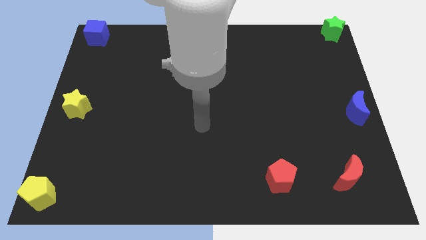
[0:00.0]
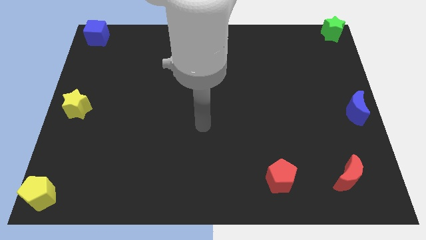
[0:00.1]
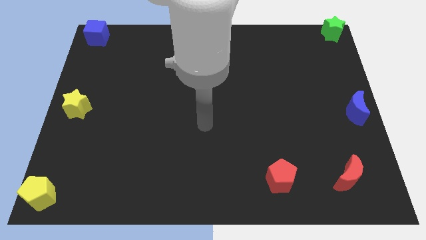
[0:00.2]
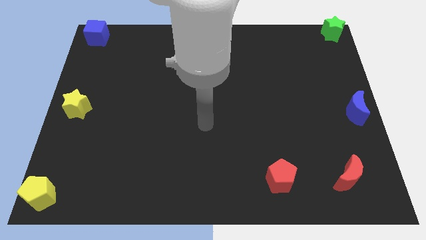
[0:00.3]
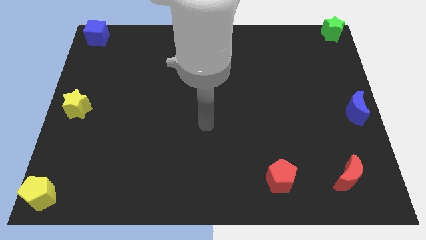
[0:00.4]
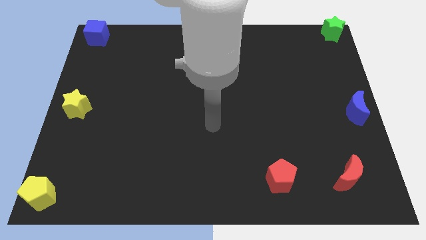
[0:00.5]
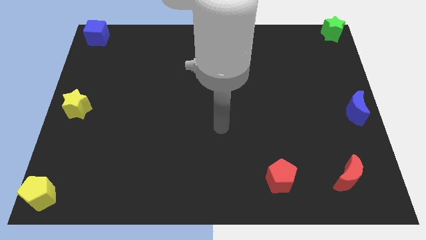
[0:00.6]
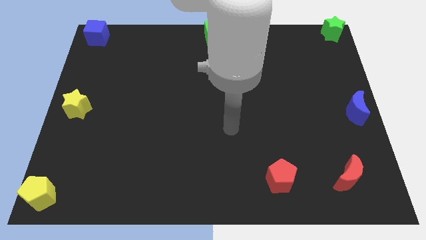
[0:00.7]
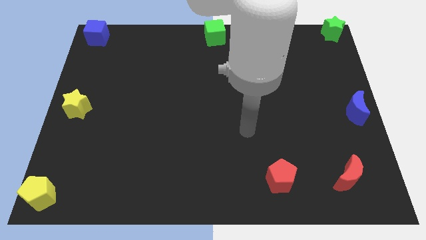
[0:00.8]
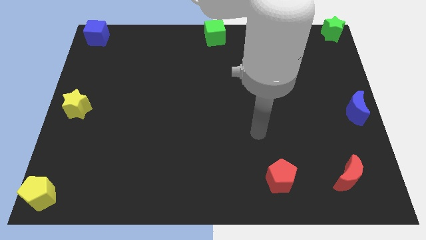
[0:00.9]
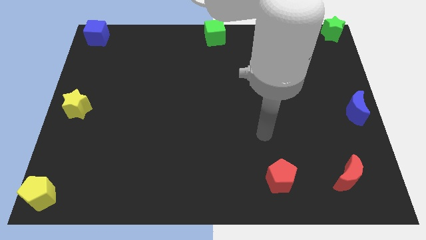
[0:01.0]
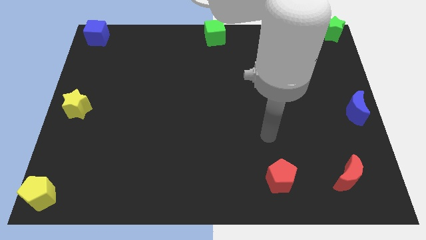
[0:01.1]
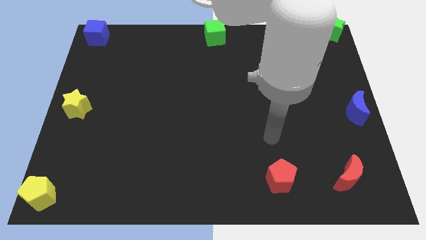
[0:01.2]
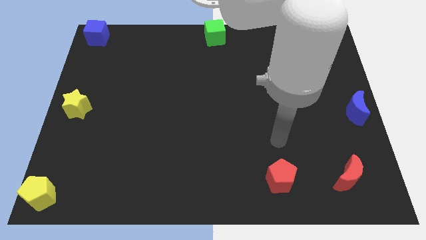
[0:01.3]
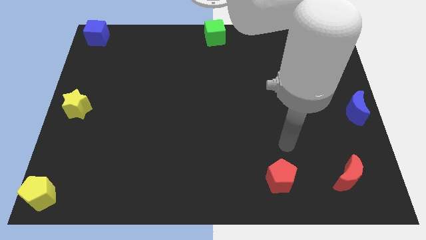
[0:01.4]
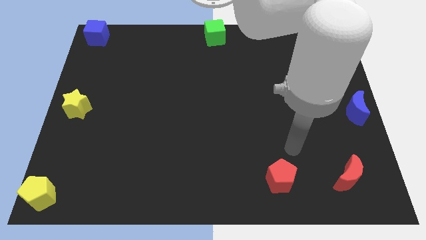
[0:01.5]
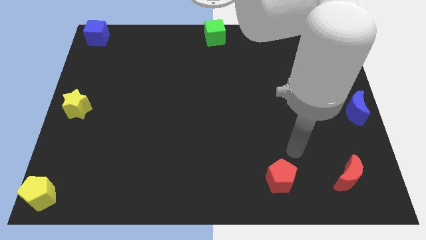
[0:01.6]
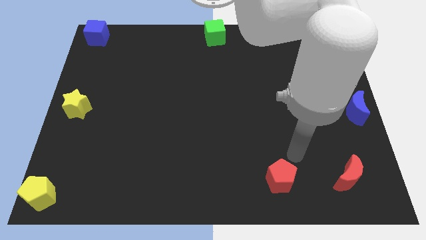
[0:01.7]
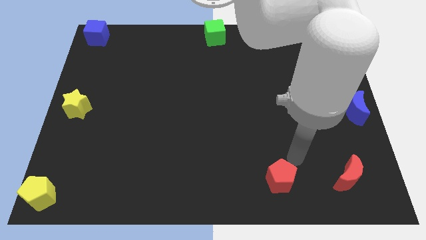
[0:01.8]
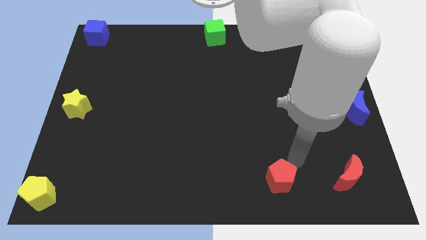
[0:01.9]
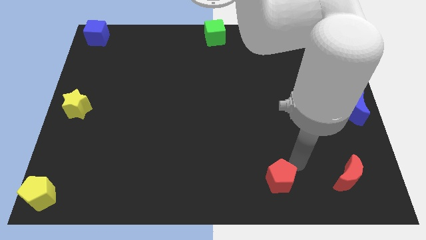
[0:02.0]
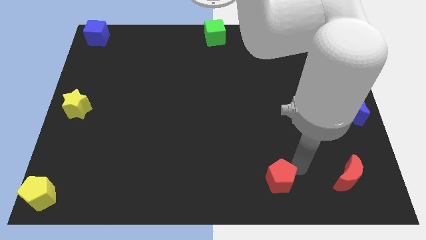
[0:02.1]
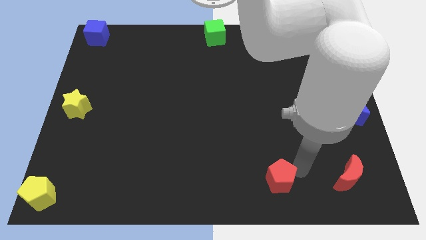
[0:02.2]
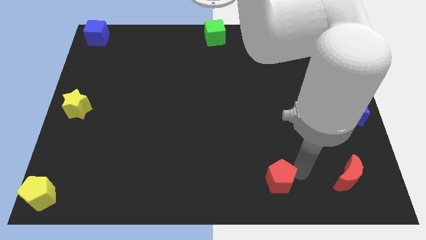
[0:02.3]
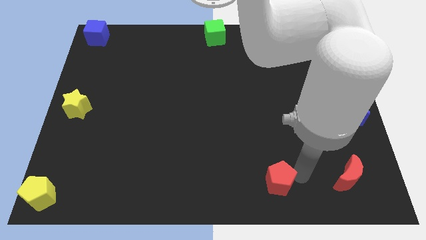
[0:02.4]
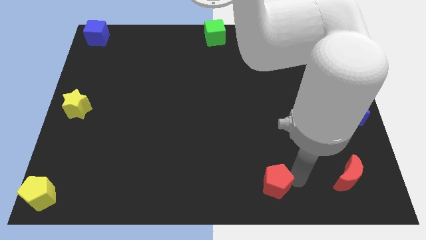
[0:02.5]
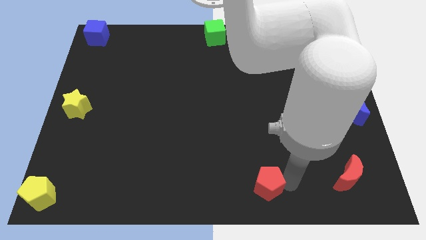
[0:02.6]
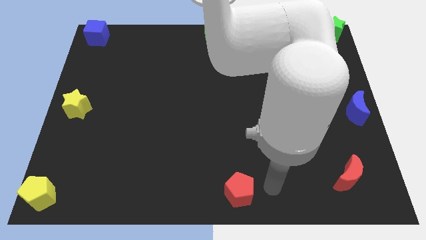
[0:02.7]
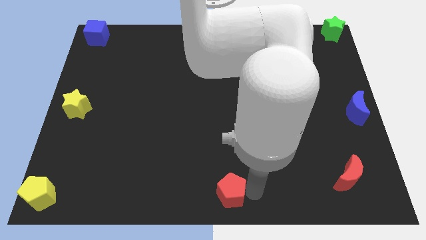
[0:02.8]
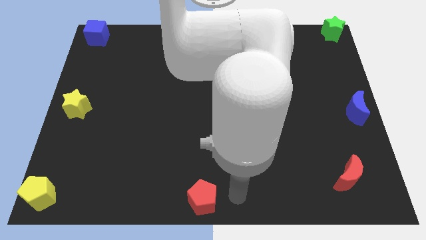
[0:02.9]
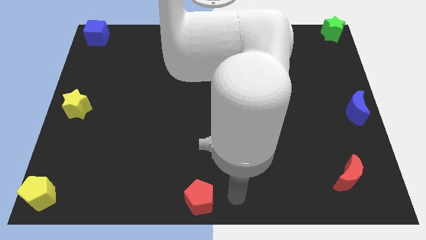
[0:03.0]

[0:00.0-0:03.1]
push the red pentagon to the bottom center of the board

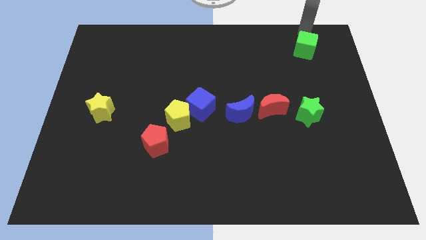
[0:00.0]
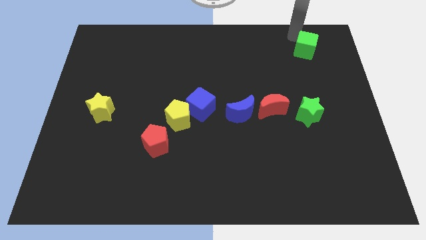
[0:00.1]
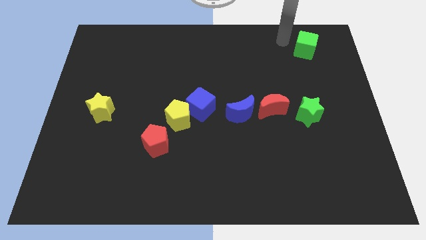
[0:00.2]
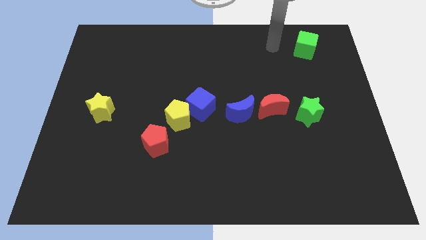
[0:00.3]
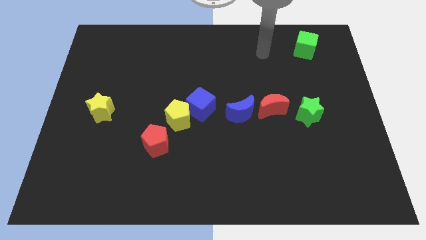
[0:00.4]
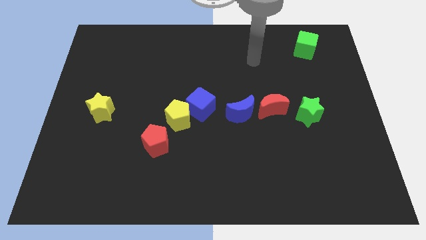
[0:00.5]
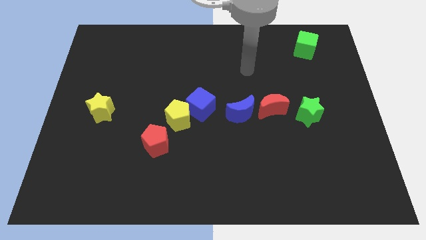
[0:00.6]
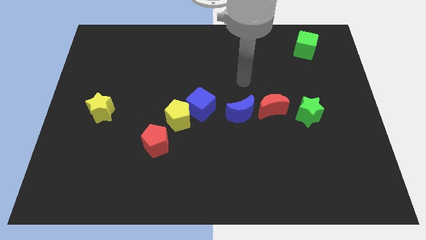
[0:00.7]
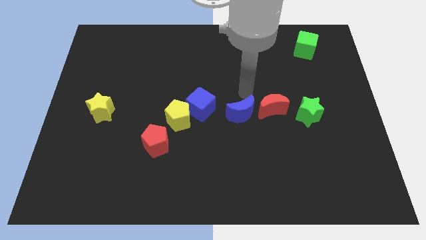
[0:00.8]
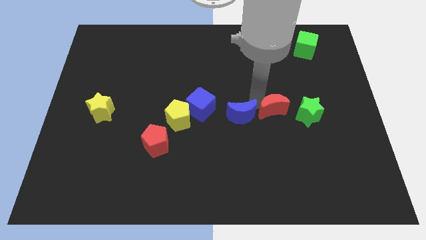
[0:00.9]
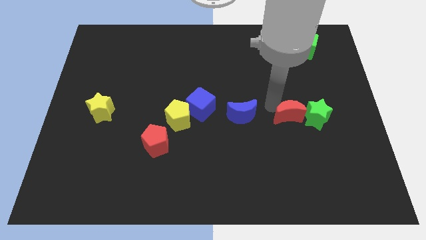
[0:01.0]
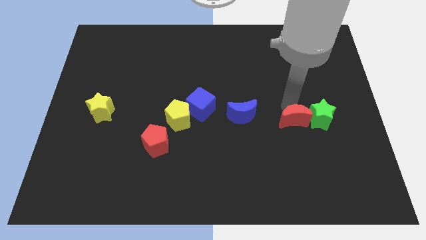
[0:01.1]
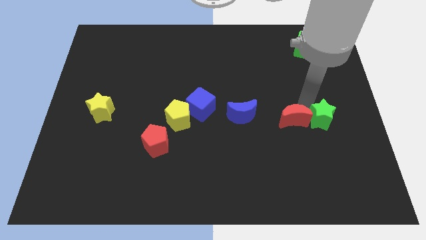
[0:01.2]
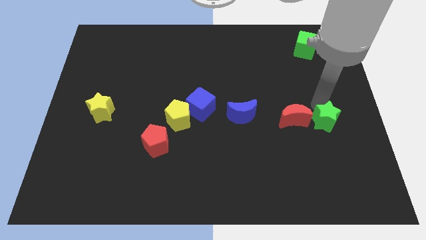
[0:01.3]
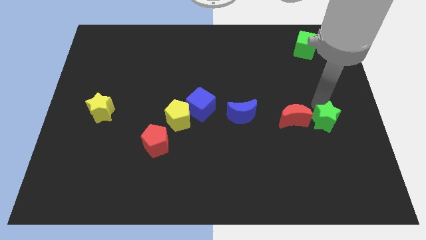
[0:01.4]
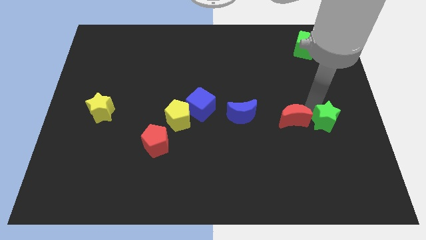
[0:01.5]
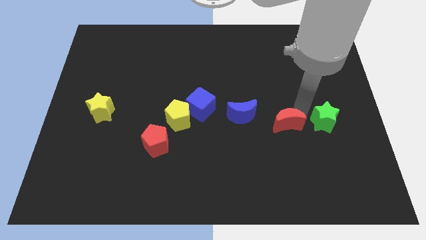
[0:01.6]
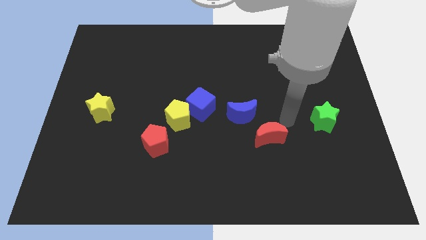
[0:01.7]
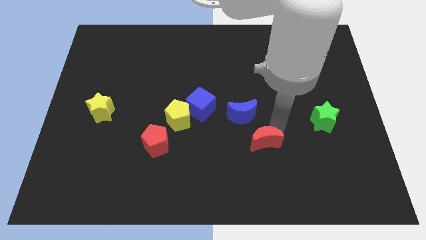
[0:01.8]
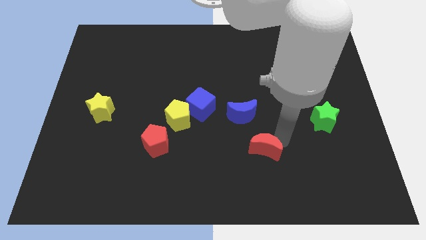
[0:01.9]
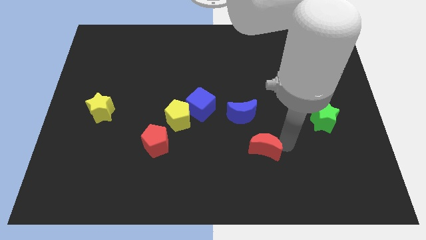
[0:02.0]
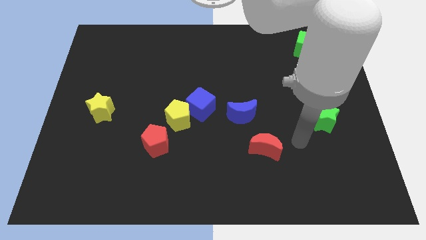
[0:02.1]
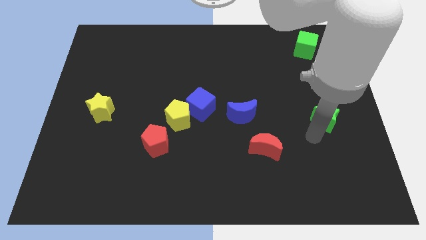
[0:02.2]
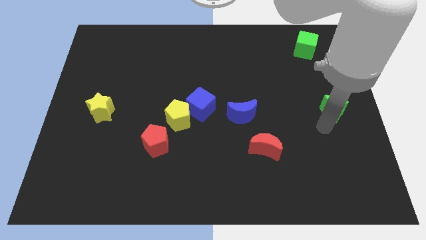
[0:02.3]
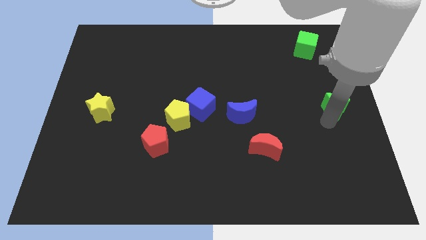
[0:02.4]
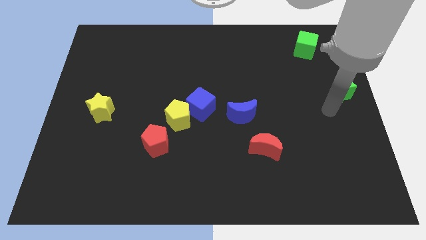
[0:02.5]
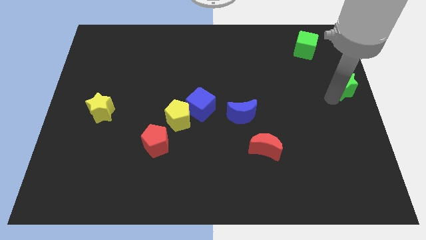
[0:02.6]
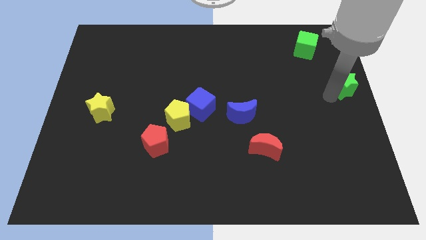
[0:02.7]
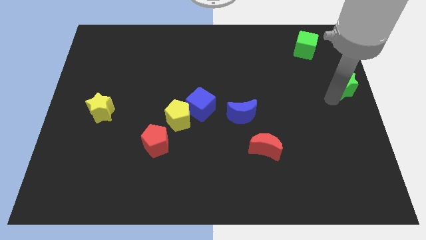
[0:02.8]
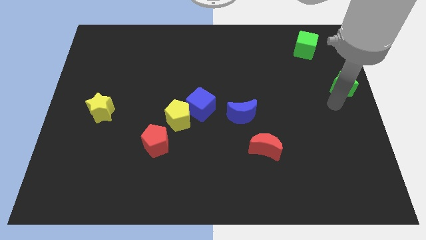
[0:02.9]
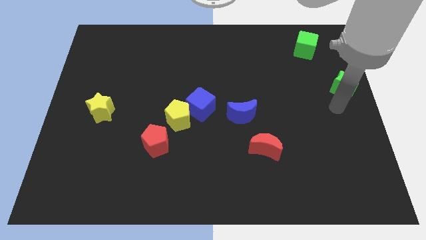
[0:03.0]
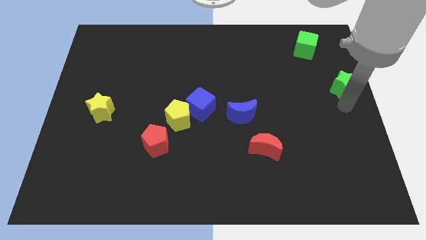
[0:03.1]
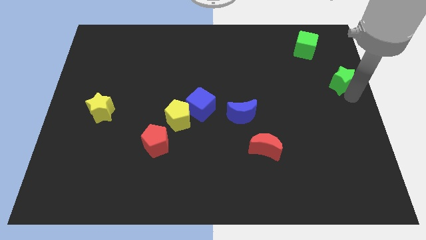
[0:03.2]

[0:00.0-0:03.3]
separate red moon and green star

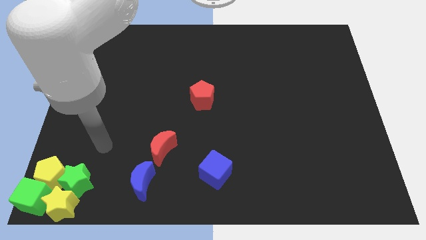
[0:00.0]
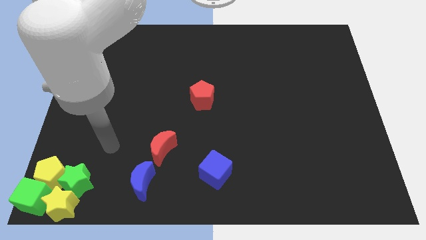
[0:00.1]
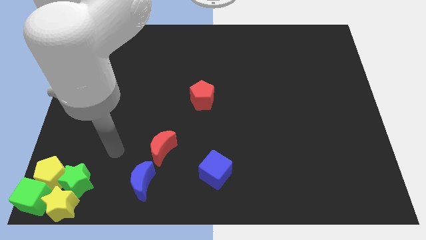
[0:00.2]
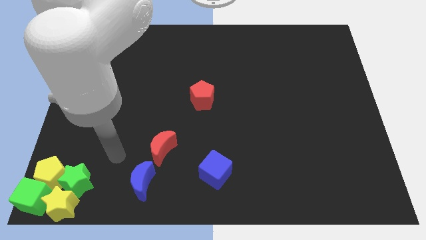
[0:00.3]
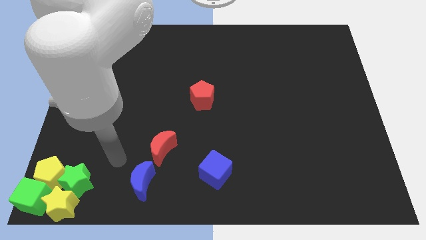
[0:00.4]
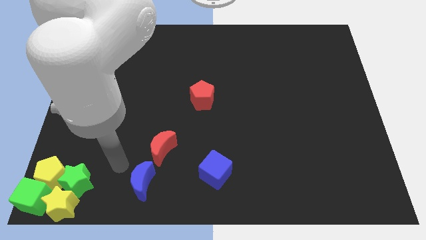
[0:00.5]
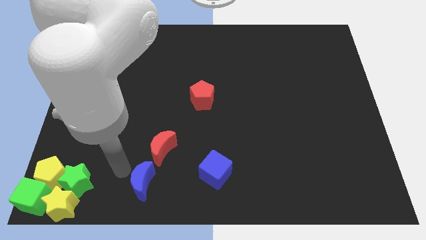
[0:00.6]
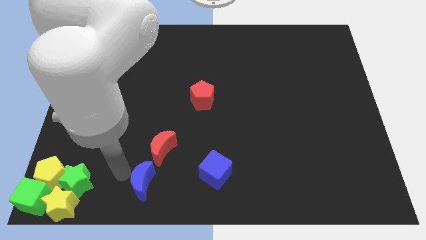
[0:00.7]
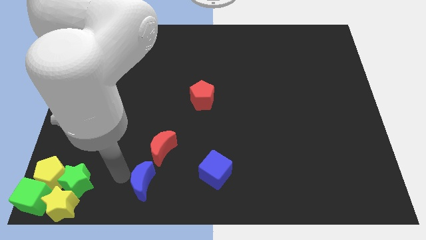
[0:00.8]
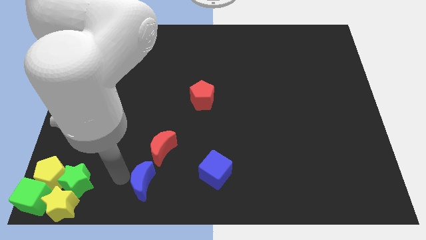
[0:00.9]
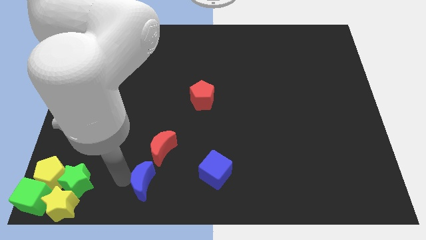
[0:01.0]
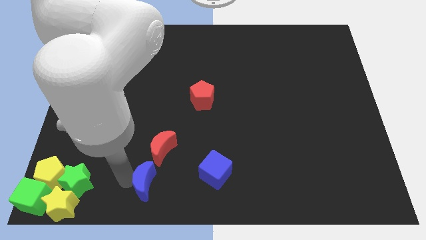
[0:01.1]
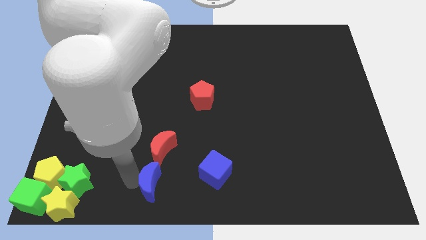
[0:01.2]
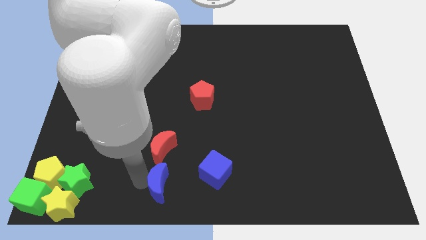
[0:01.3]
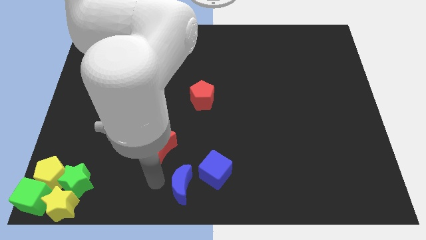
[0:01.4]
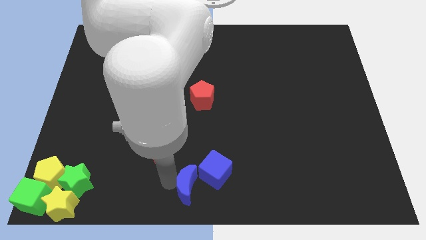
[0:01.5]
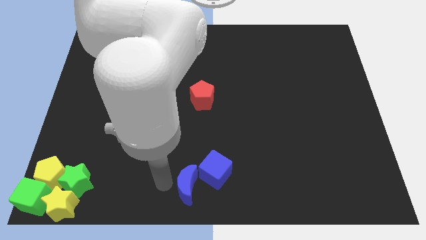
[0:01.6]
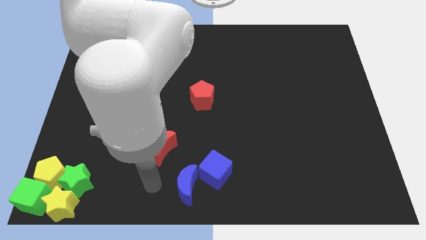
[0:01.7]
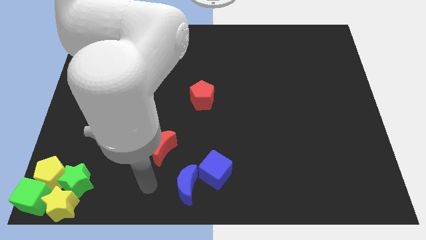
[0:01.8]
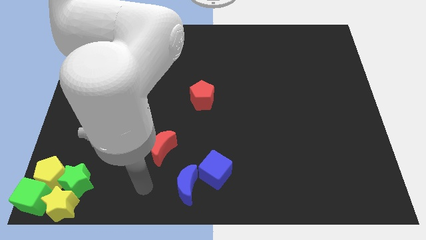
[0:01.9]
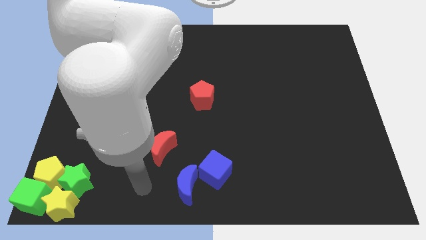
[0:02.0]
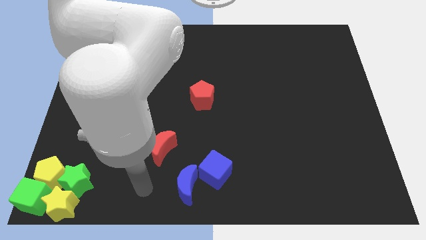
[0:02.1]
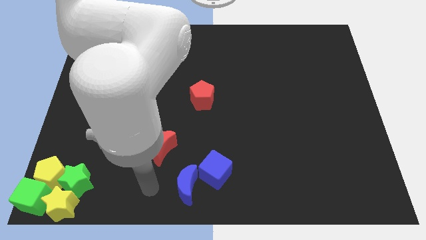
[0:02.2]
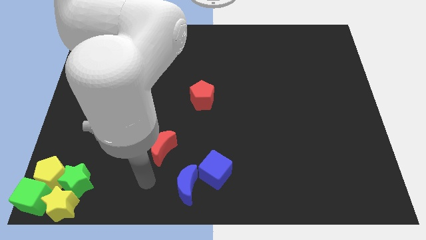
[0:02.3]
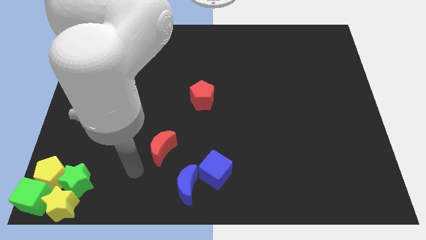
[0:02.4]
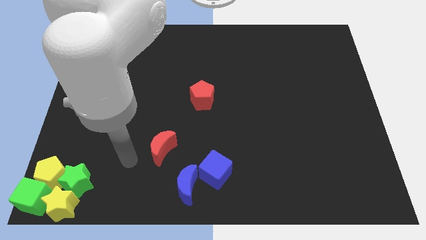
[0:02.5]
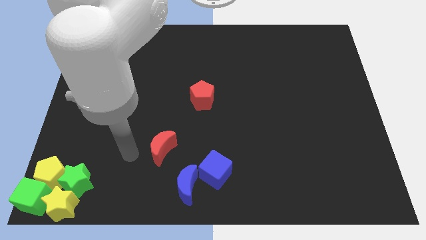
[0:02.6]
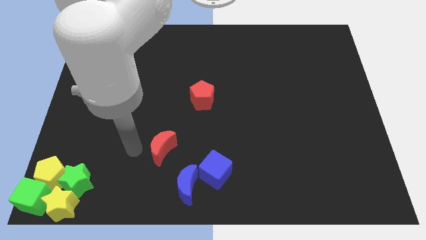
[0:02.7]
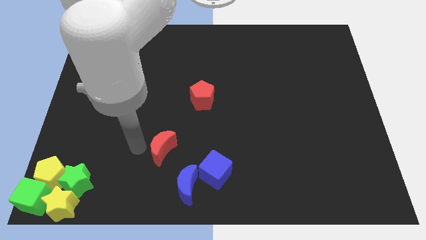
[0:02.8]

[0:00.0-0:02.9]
push blue crescent into blue block
